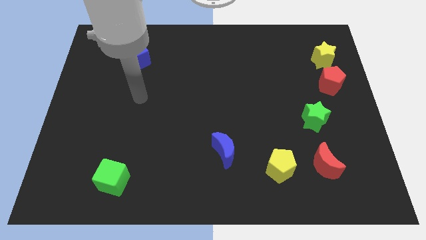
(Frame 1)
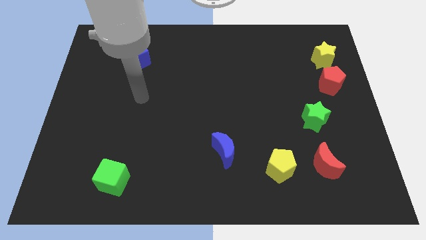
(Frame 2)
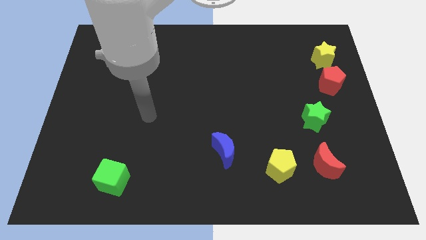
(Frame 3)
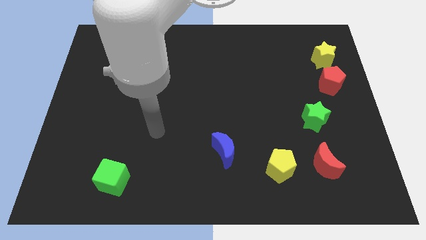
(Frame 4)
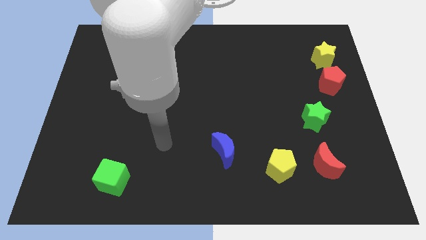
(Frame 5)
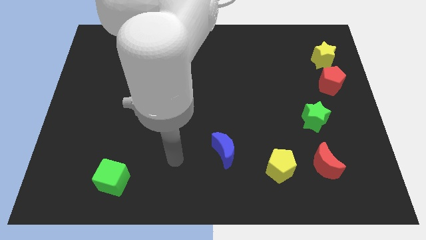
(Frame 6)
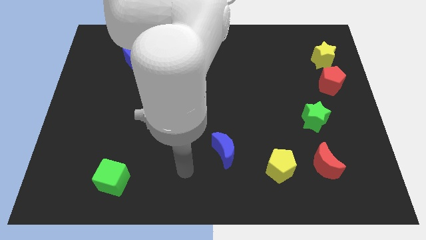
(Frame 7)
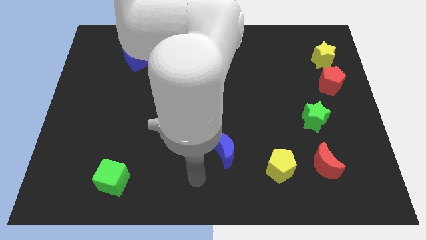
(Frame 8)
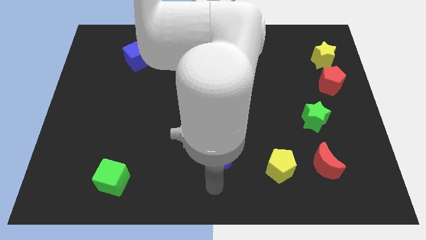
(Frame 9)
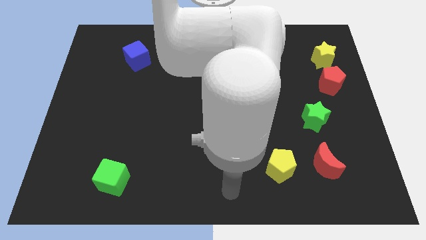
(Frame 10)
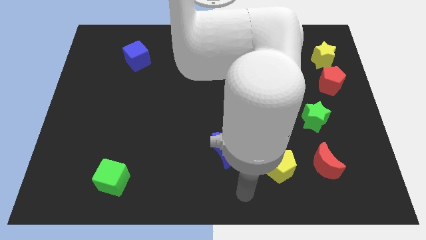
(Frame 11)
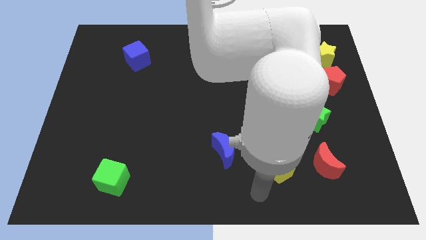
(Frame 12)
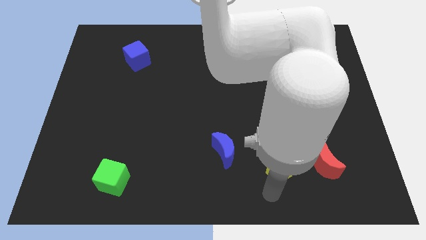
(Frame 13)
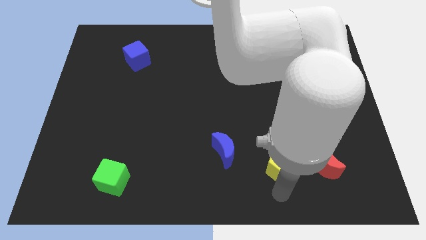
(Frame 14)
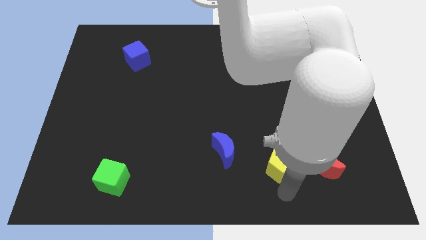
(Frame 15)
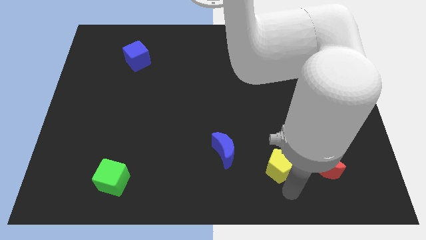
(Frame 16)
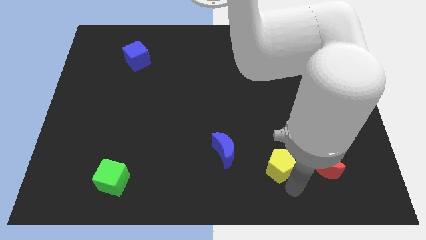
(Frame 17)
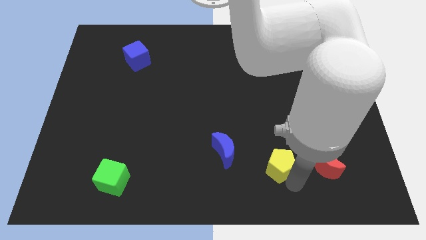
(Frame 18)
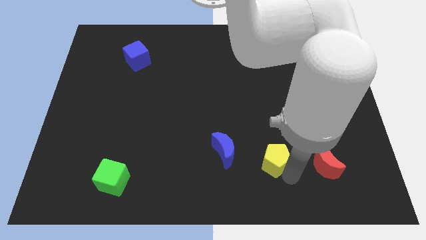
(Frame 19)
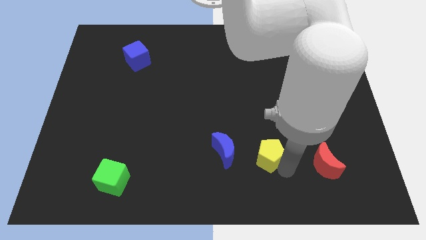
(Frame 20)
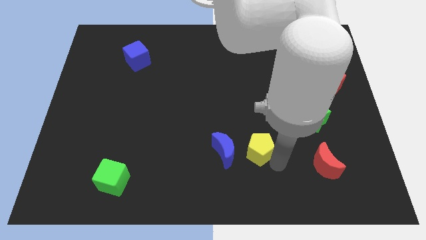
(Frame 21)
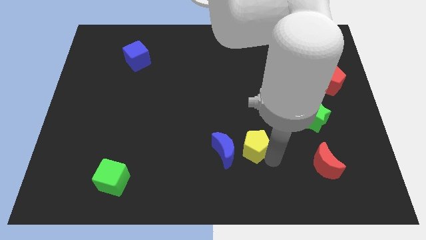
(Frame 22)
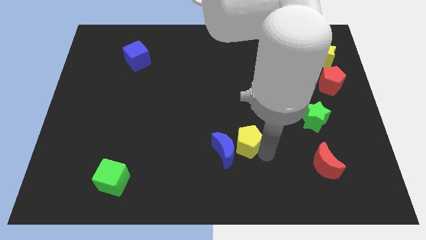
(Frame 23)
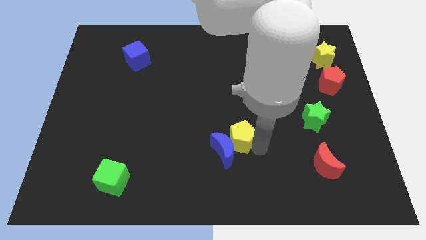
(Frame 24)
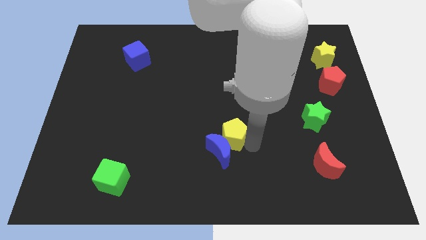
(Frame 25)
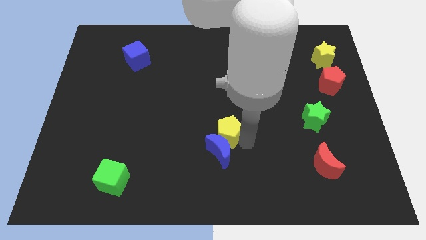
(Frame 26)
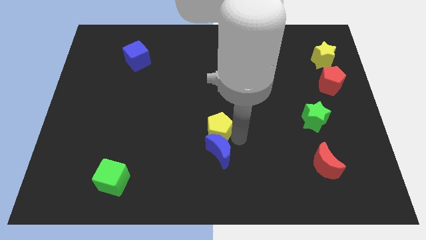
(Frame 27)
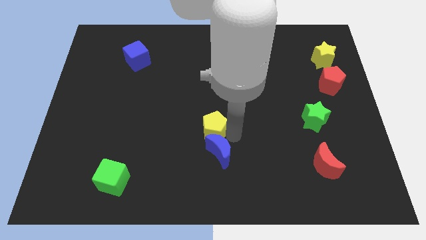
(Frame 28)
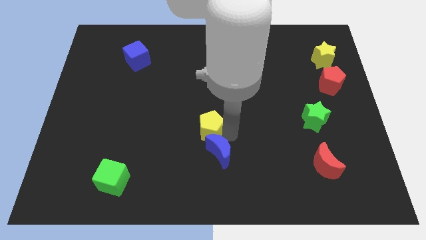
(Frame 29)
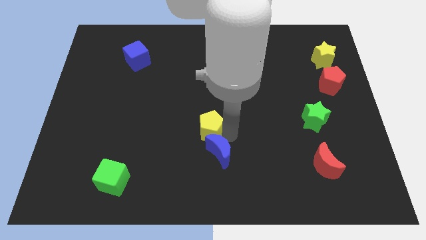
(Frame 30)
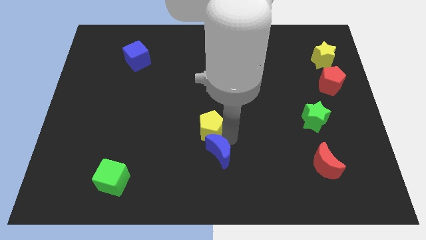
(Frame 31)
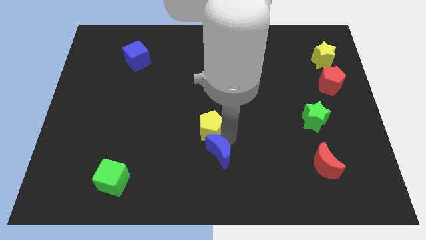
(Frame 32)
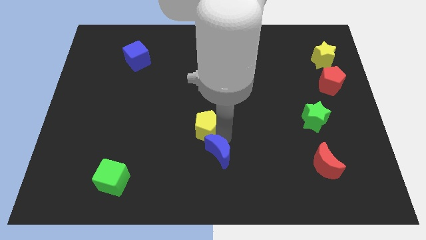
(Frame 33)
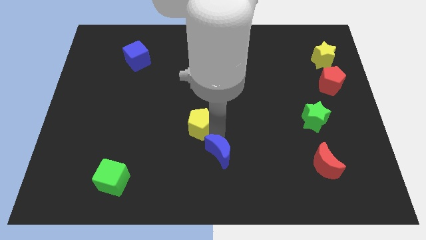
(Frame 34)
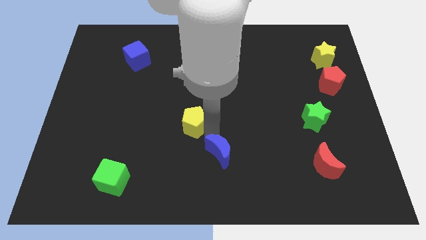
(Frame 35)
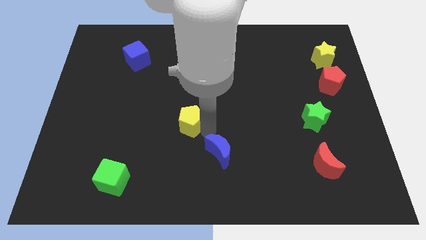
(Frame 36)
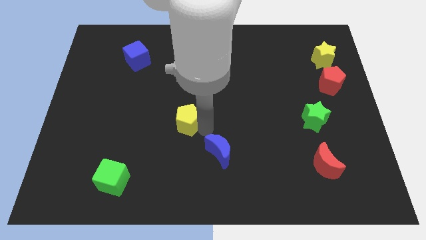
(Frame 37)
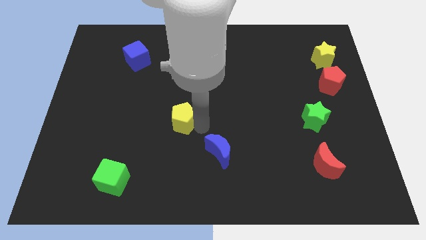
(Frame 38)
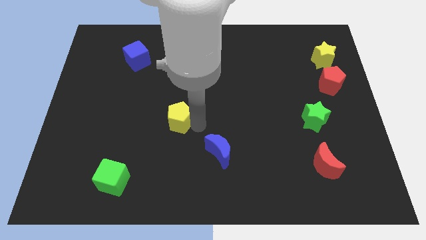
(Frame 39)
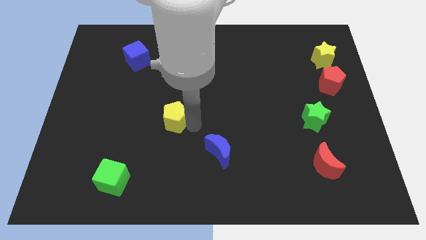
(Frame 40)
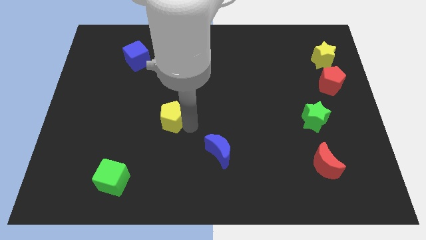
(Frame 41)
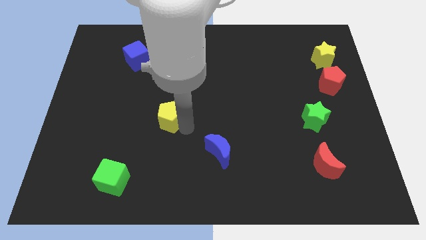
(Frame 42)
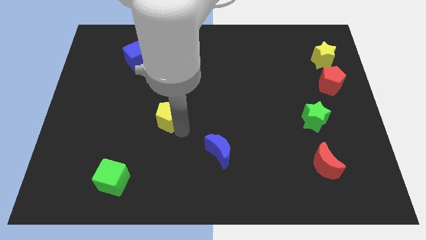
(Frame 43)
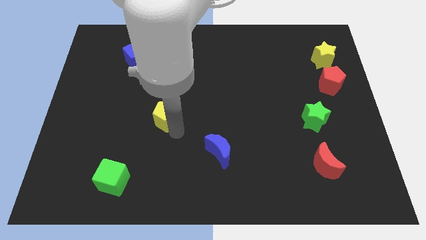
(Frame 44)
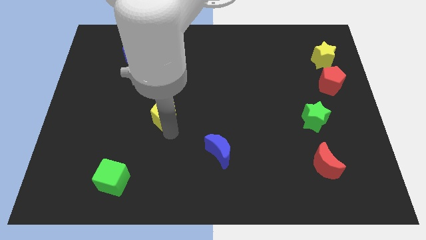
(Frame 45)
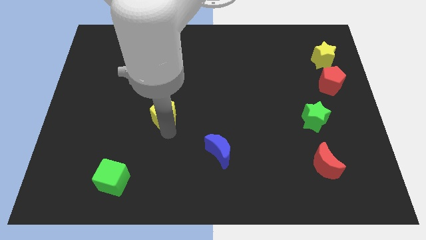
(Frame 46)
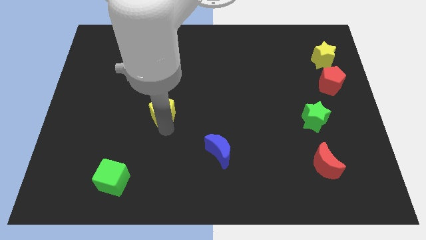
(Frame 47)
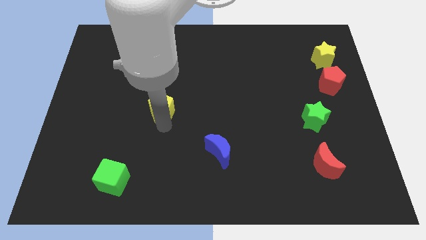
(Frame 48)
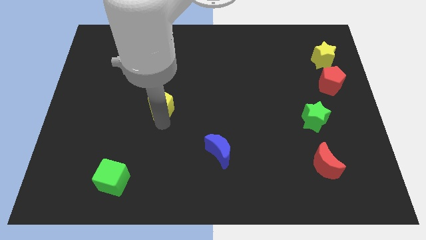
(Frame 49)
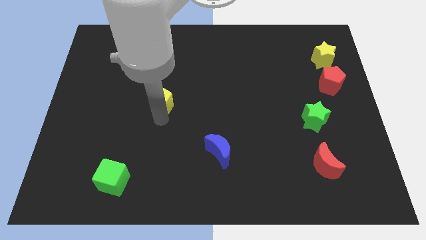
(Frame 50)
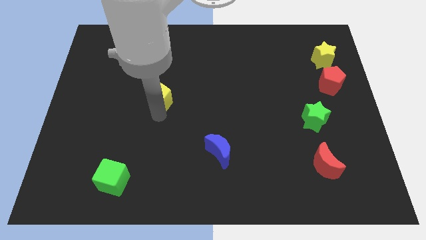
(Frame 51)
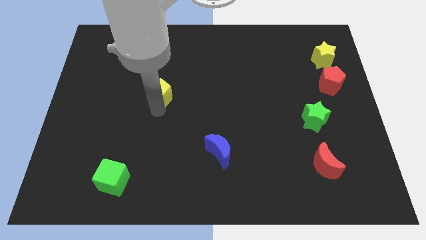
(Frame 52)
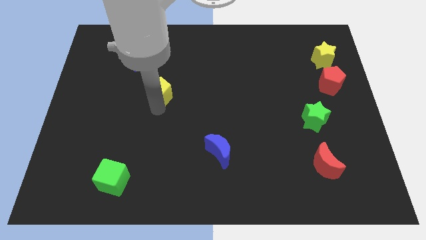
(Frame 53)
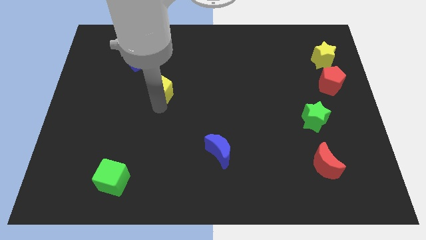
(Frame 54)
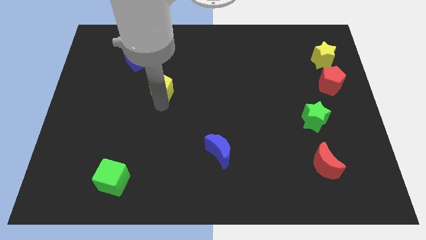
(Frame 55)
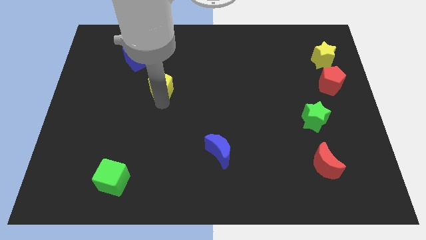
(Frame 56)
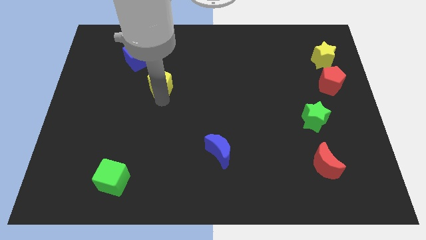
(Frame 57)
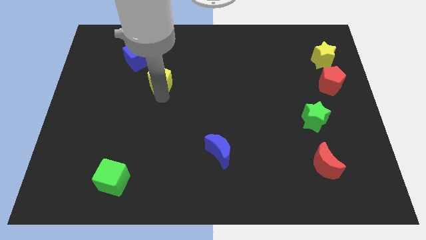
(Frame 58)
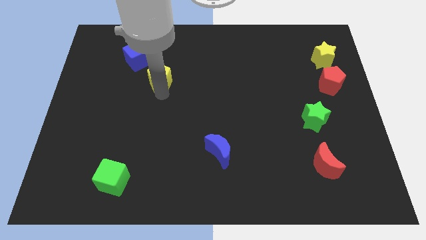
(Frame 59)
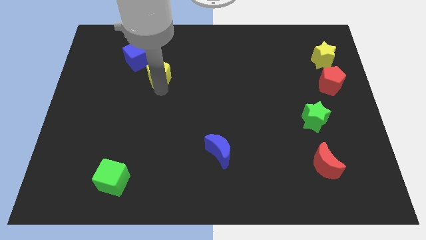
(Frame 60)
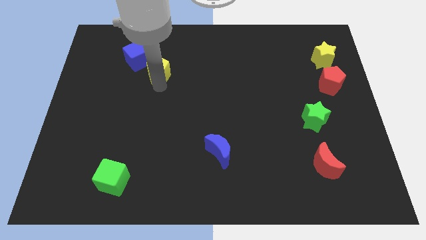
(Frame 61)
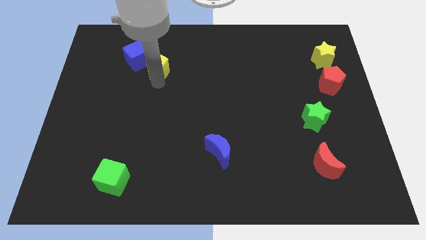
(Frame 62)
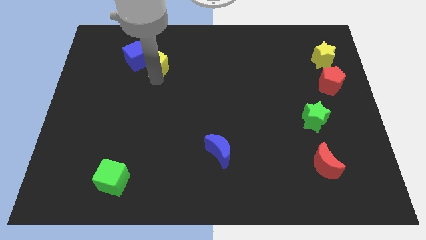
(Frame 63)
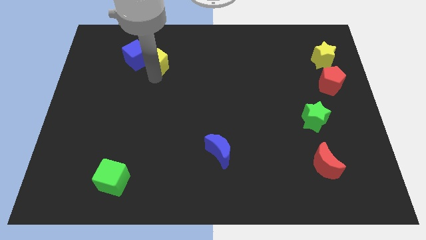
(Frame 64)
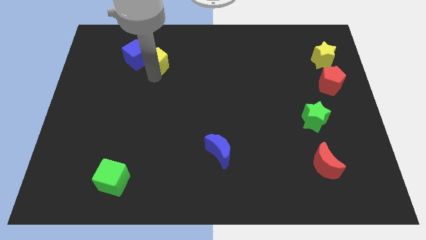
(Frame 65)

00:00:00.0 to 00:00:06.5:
move the yellow pentagon next to the blue cube

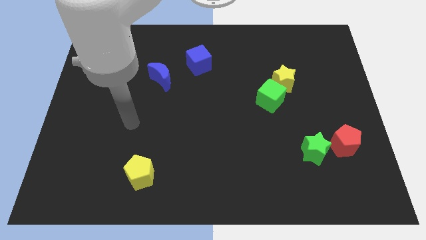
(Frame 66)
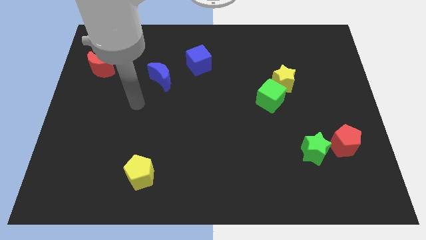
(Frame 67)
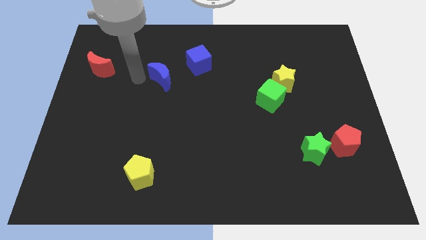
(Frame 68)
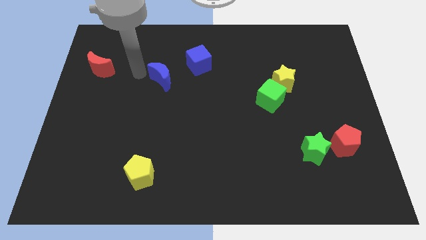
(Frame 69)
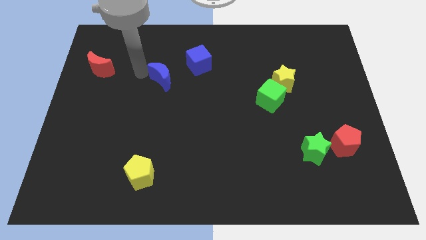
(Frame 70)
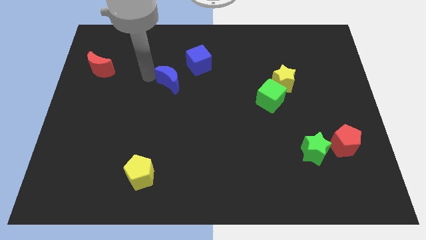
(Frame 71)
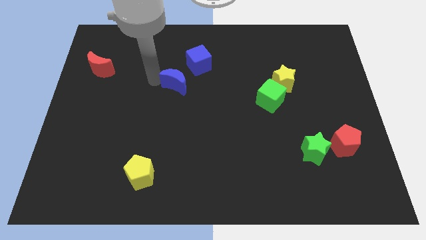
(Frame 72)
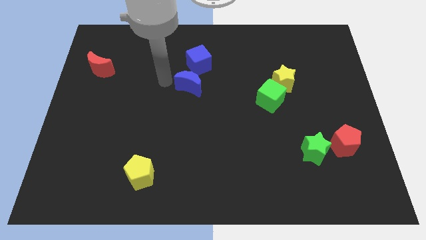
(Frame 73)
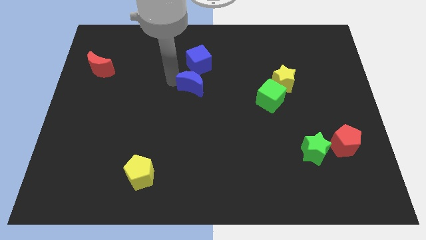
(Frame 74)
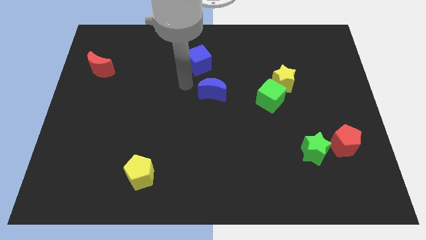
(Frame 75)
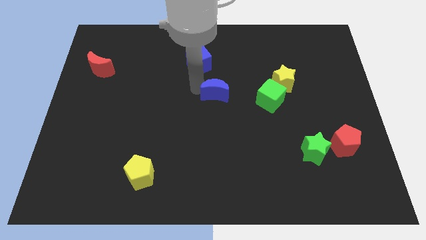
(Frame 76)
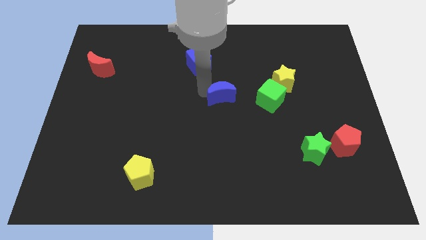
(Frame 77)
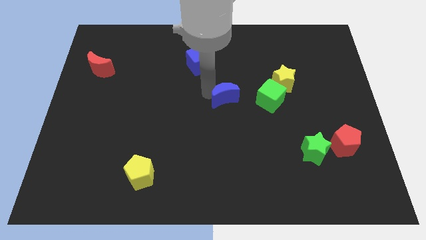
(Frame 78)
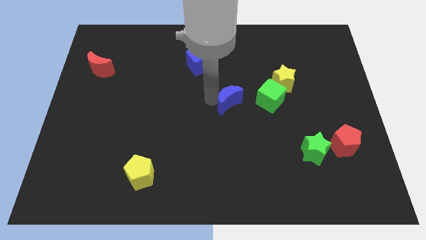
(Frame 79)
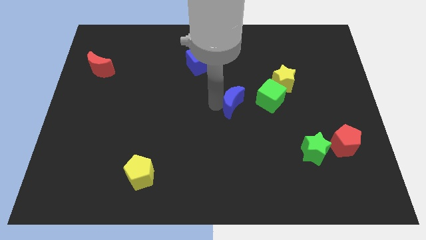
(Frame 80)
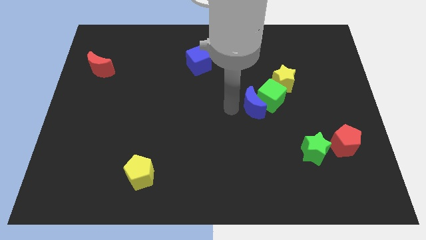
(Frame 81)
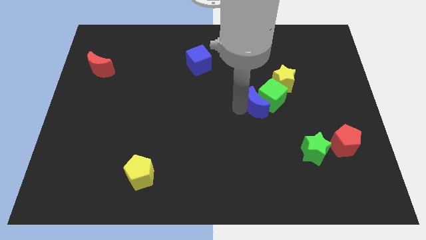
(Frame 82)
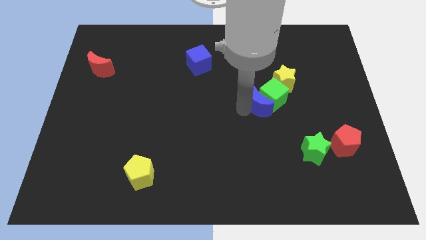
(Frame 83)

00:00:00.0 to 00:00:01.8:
move the blue moon towards the green cube
